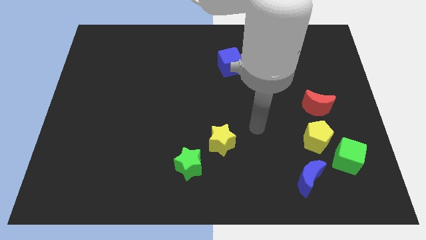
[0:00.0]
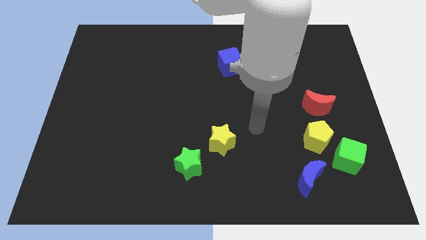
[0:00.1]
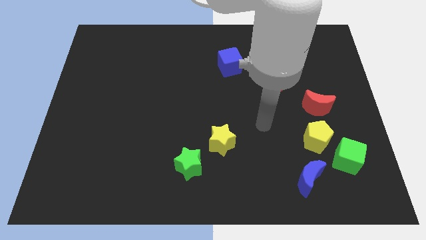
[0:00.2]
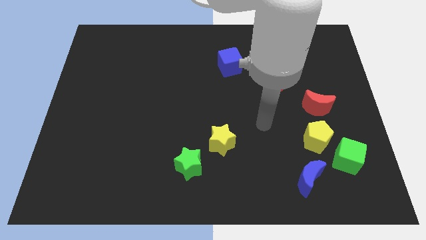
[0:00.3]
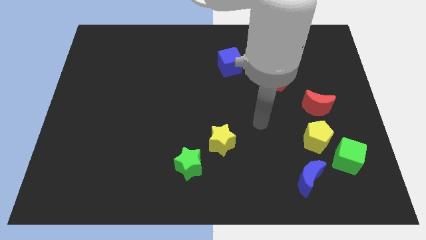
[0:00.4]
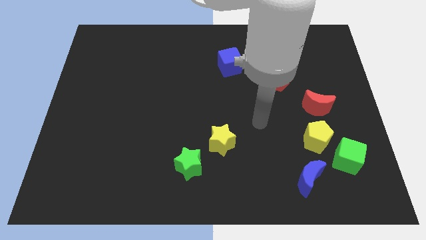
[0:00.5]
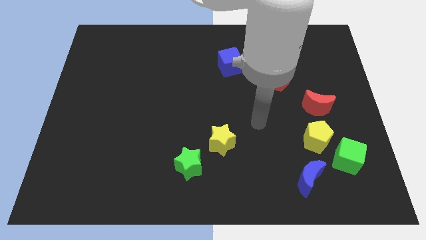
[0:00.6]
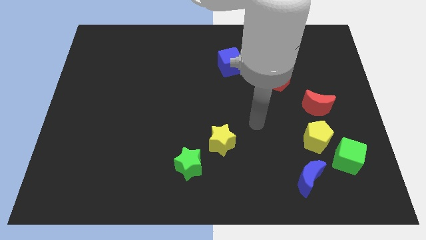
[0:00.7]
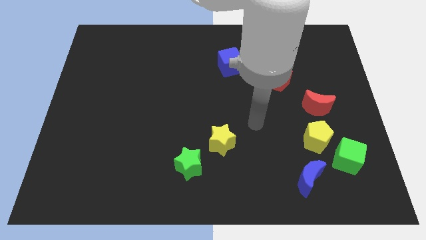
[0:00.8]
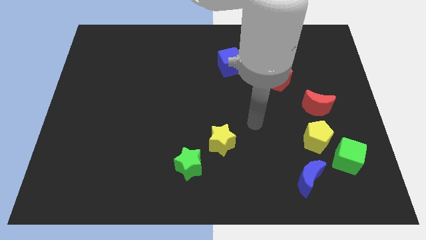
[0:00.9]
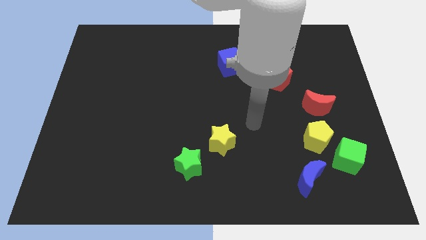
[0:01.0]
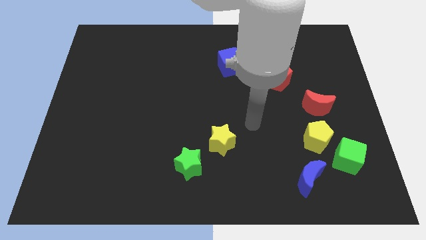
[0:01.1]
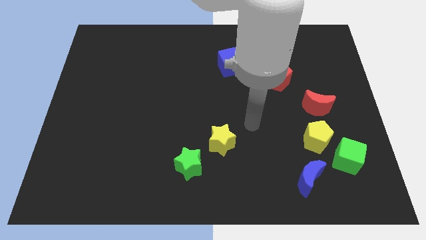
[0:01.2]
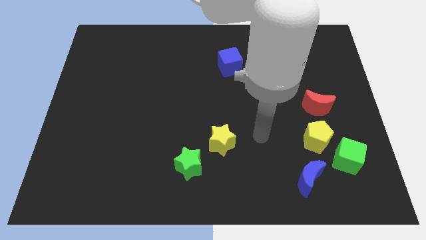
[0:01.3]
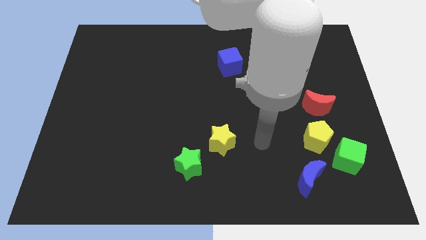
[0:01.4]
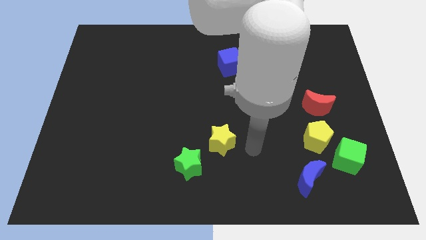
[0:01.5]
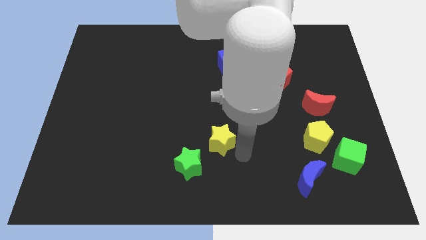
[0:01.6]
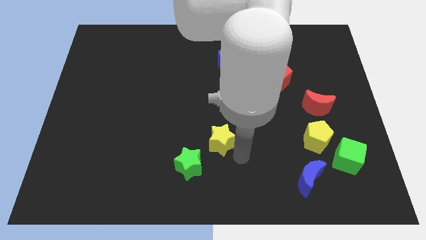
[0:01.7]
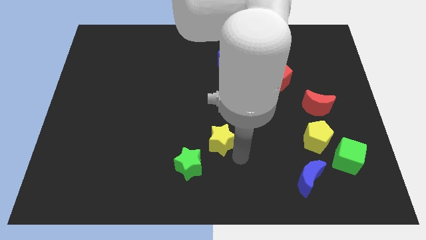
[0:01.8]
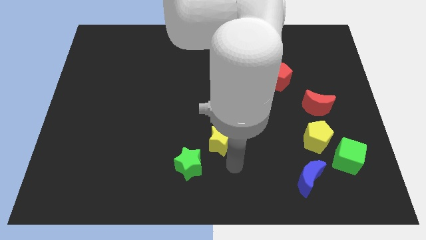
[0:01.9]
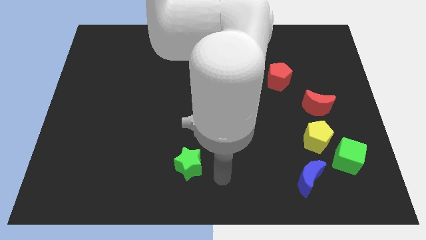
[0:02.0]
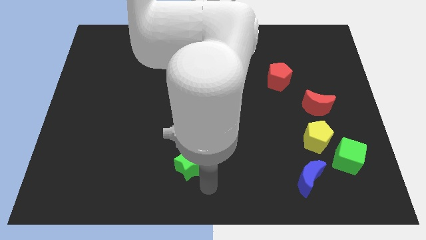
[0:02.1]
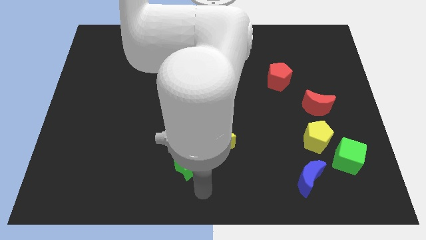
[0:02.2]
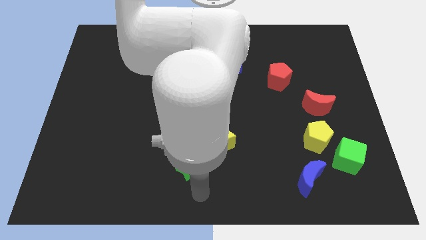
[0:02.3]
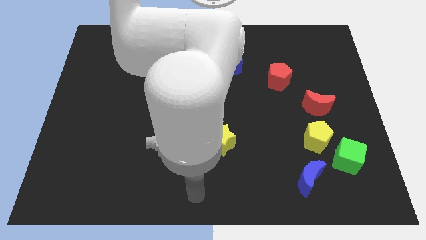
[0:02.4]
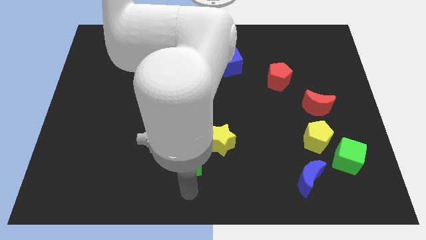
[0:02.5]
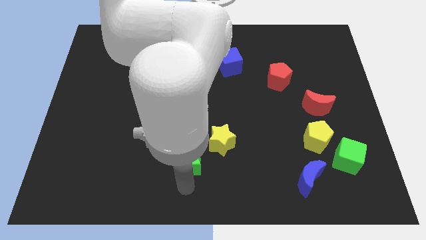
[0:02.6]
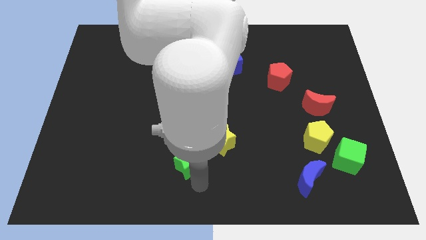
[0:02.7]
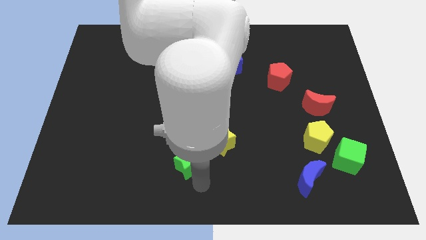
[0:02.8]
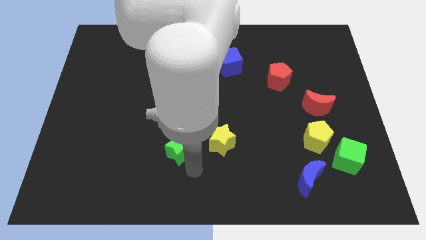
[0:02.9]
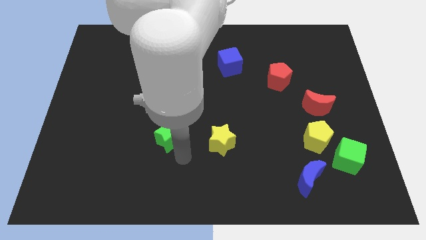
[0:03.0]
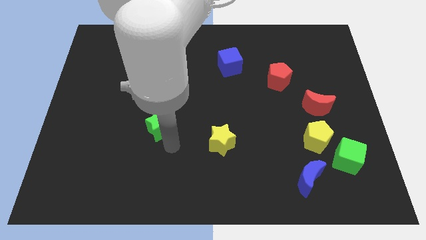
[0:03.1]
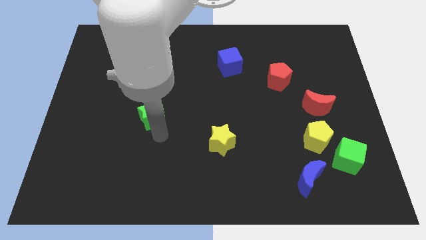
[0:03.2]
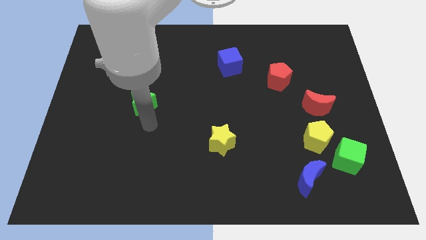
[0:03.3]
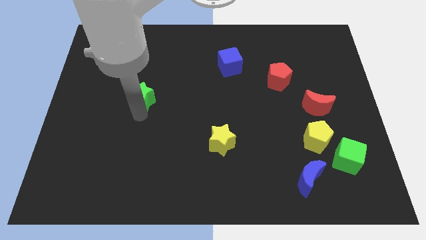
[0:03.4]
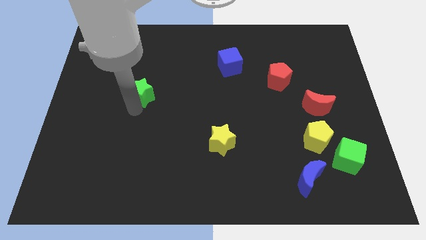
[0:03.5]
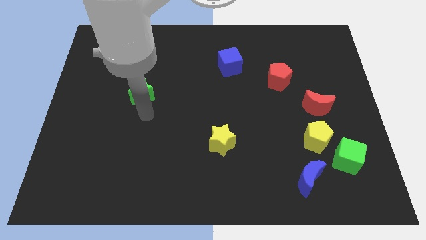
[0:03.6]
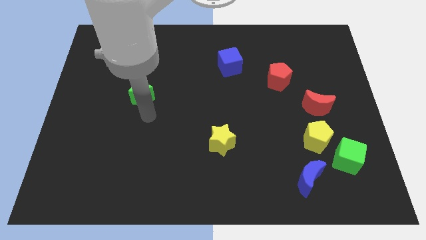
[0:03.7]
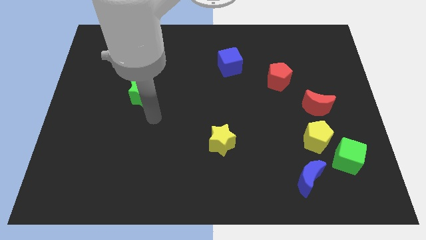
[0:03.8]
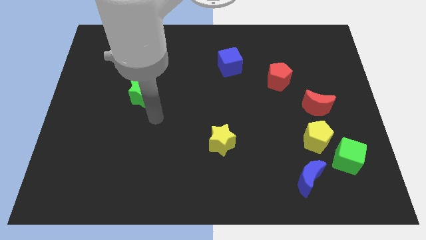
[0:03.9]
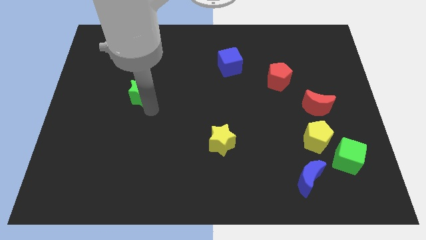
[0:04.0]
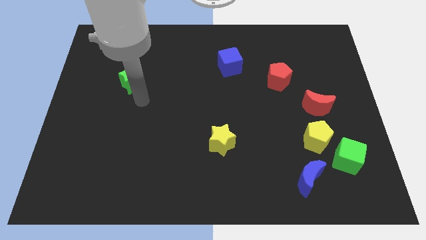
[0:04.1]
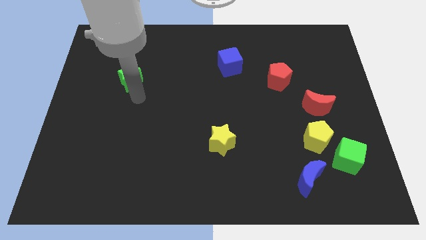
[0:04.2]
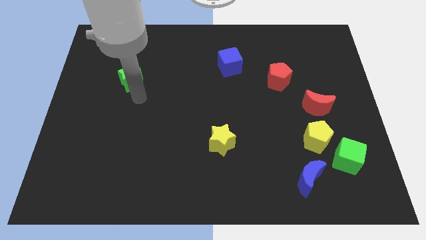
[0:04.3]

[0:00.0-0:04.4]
place green star parallel left to red pentagon

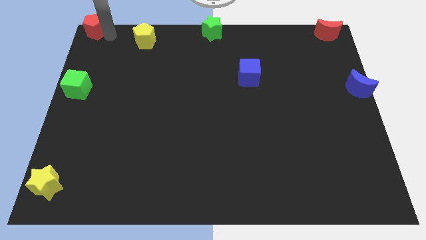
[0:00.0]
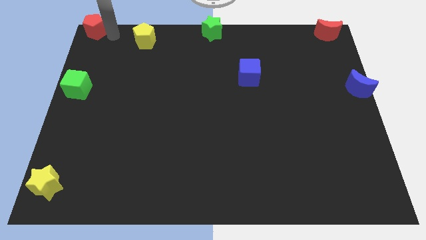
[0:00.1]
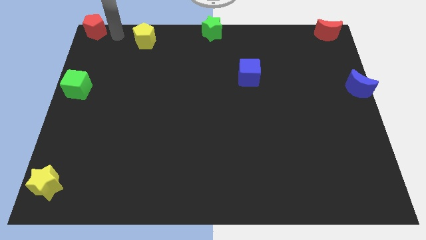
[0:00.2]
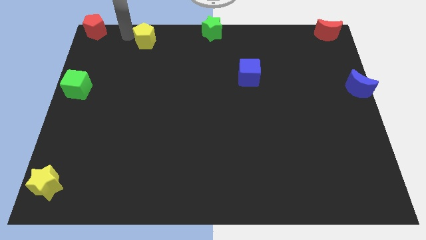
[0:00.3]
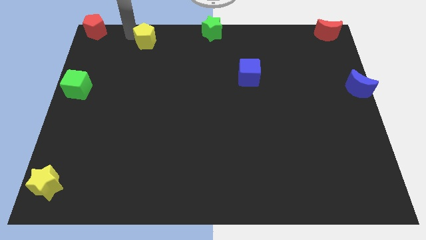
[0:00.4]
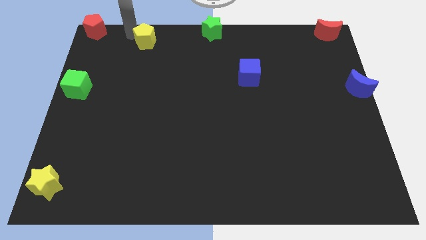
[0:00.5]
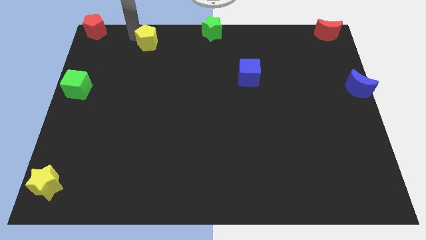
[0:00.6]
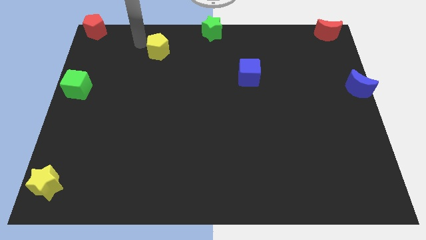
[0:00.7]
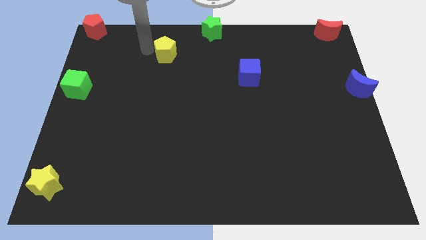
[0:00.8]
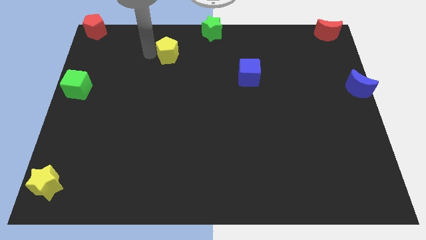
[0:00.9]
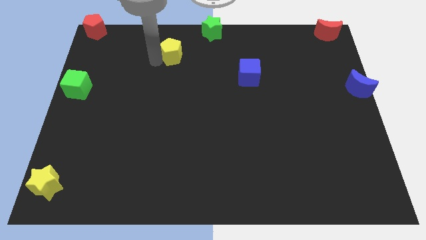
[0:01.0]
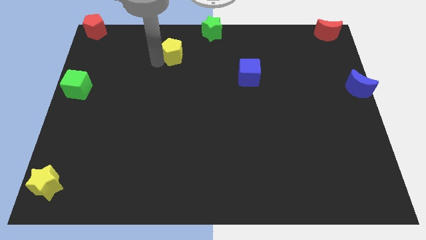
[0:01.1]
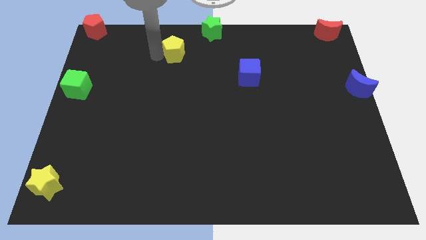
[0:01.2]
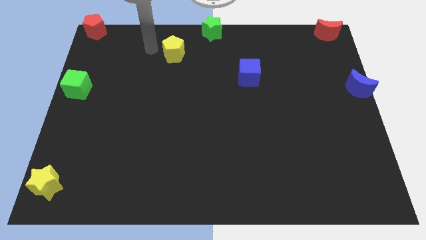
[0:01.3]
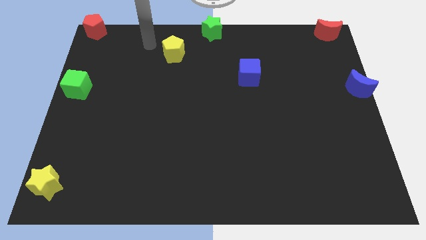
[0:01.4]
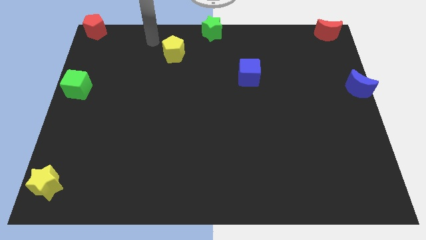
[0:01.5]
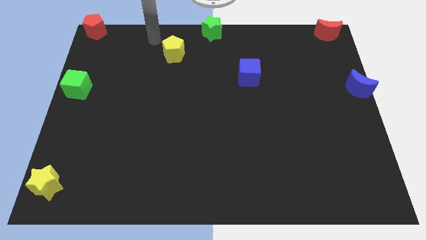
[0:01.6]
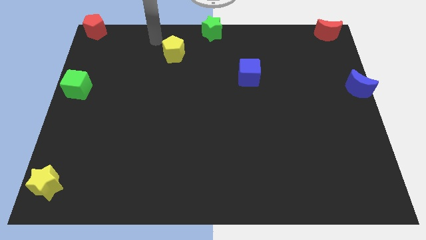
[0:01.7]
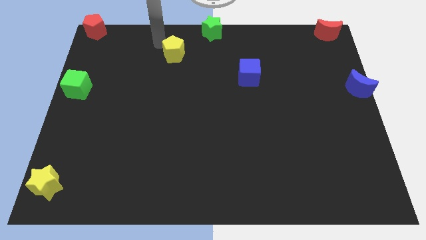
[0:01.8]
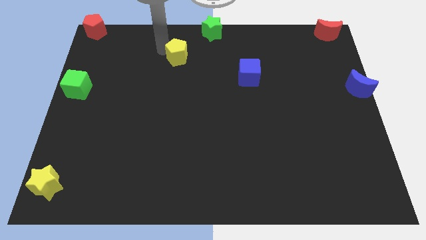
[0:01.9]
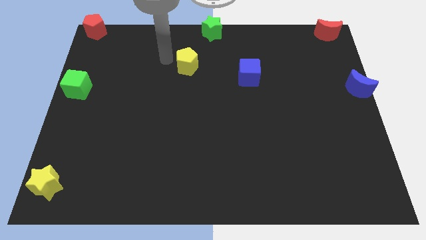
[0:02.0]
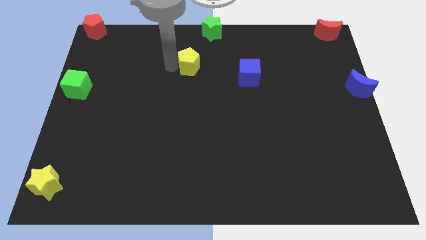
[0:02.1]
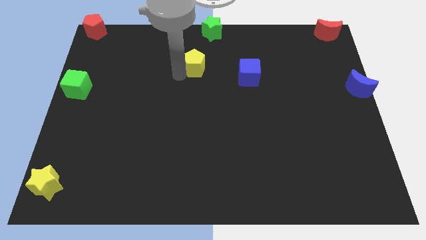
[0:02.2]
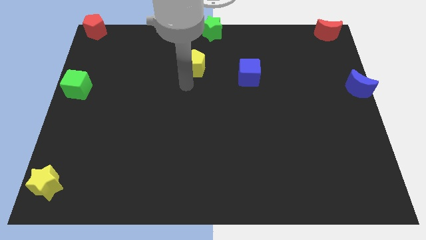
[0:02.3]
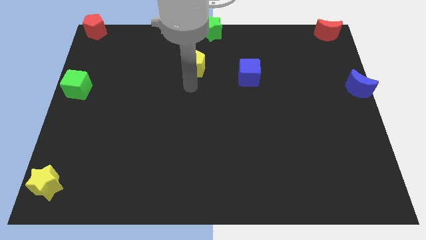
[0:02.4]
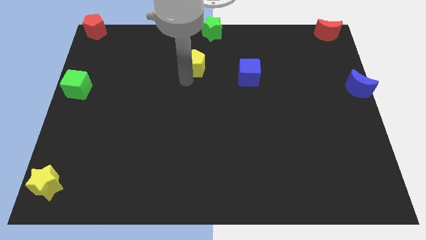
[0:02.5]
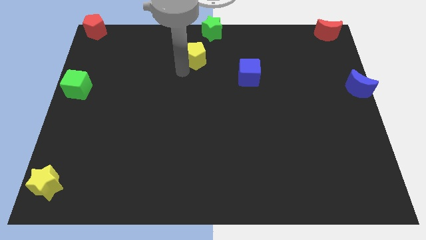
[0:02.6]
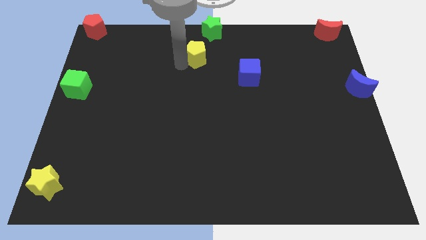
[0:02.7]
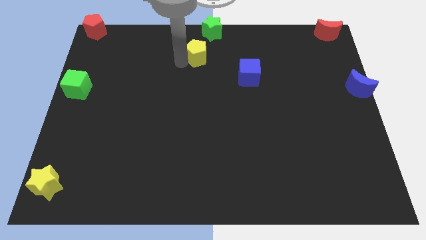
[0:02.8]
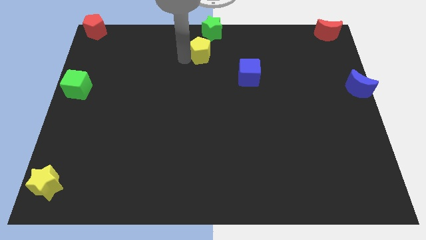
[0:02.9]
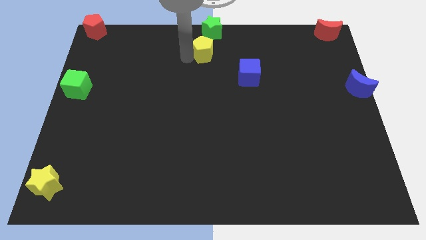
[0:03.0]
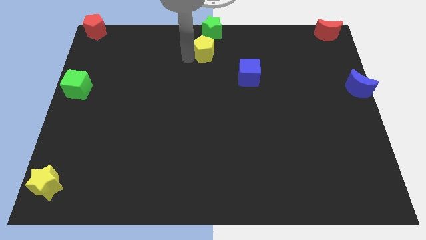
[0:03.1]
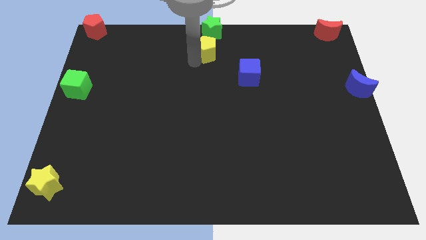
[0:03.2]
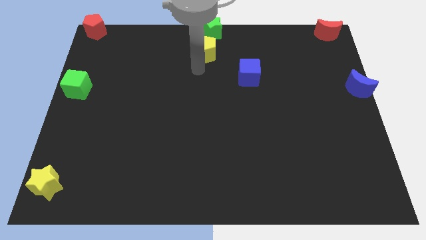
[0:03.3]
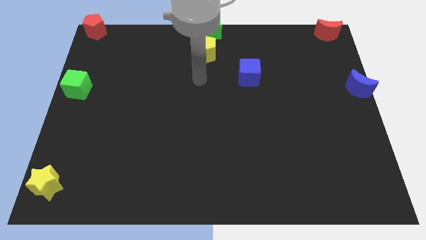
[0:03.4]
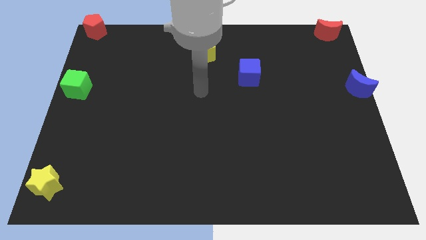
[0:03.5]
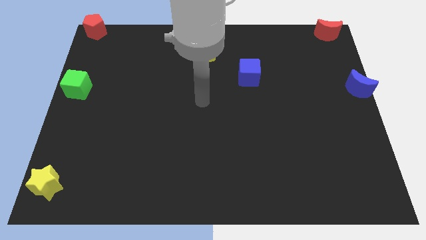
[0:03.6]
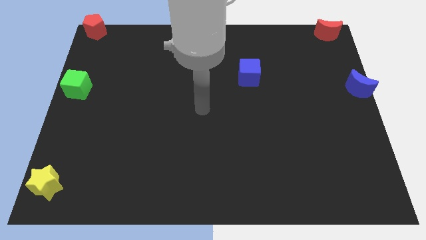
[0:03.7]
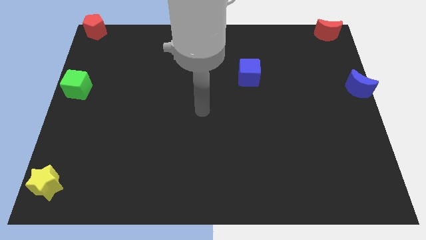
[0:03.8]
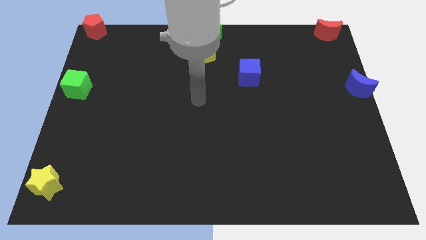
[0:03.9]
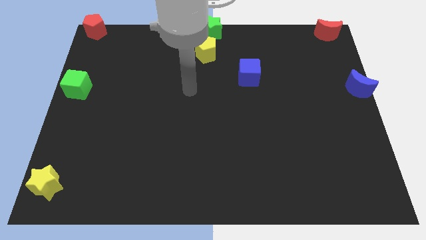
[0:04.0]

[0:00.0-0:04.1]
push the yellow pentagon to the bottom side of the green star

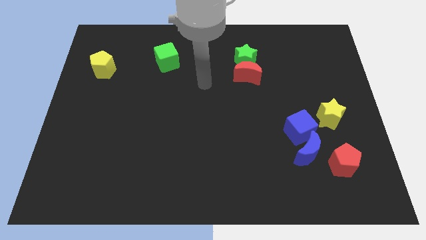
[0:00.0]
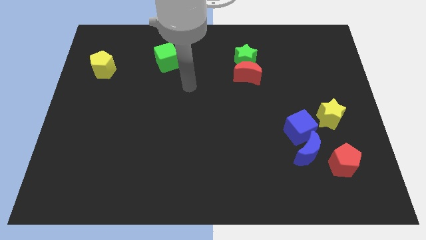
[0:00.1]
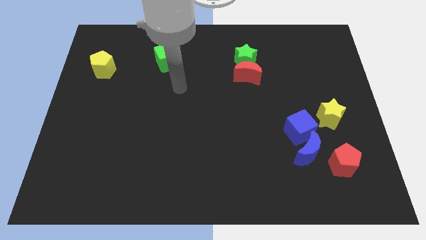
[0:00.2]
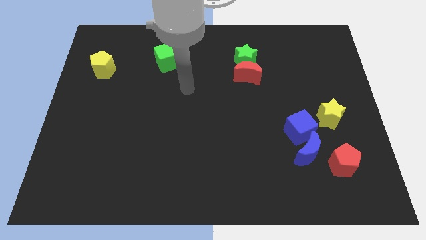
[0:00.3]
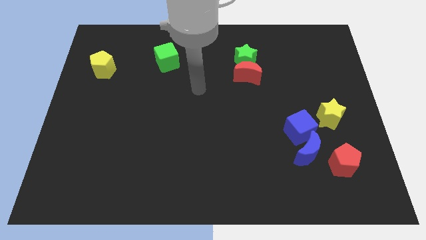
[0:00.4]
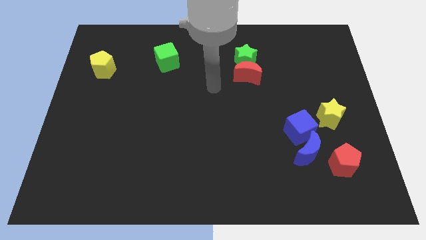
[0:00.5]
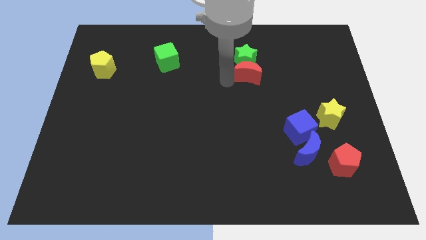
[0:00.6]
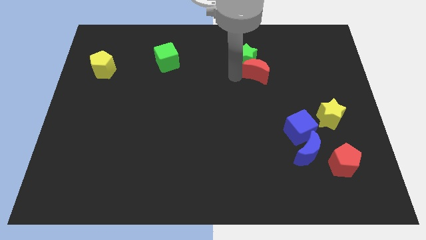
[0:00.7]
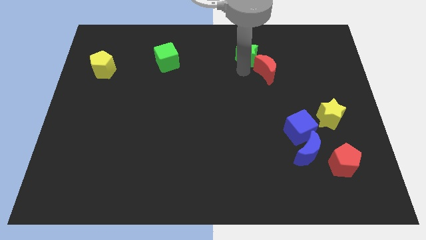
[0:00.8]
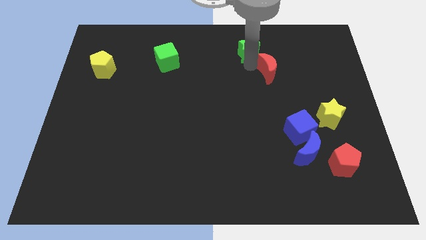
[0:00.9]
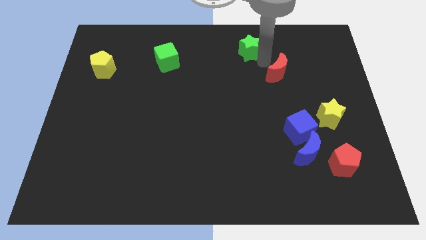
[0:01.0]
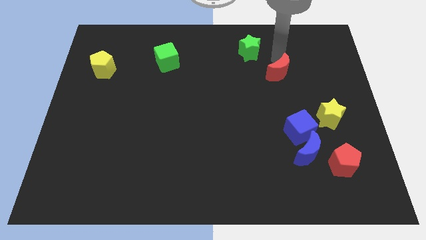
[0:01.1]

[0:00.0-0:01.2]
separate the green star from the red crescent
